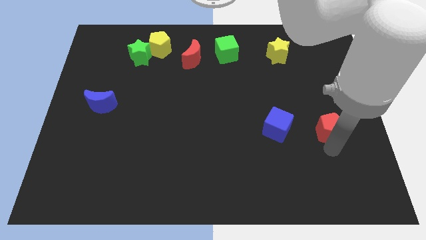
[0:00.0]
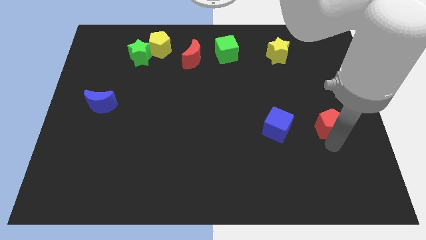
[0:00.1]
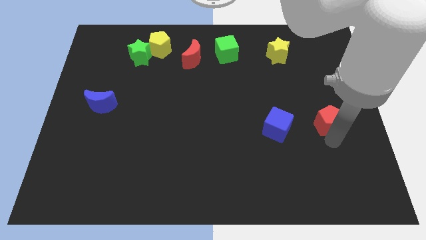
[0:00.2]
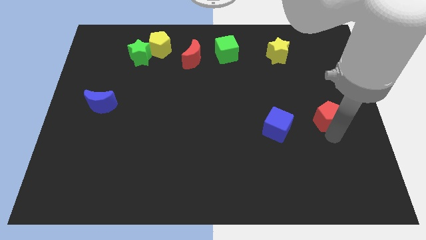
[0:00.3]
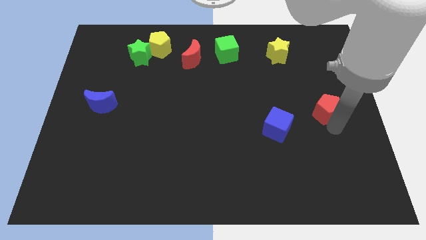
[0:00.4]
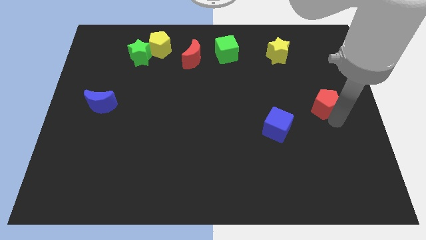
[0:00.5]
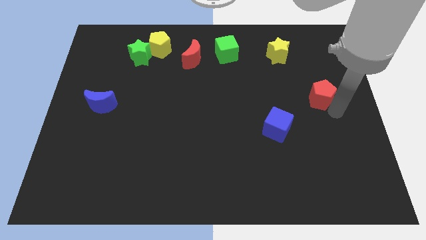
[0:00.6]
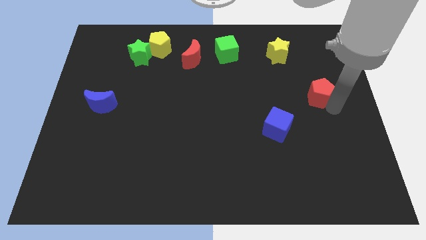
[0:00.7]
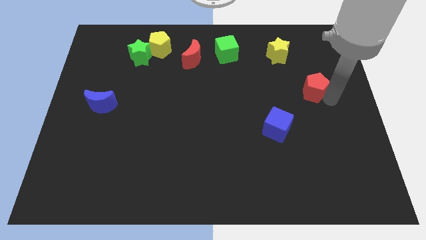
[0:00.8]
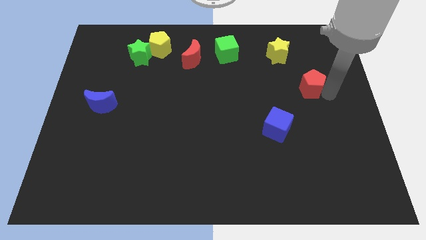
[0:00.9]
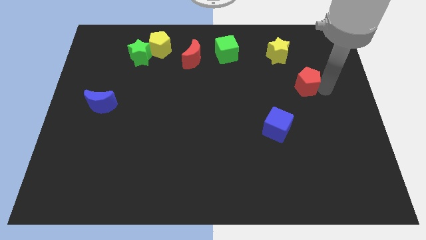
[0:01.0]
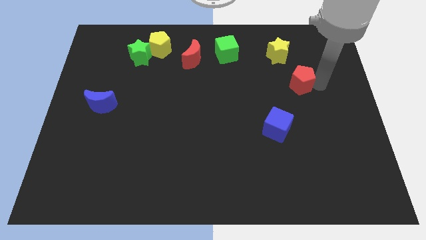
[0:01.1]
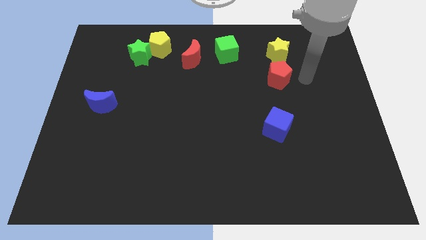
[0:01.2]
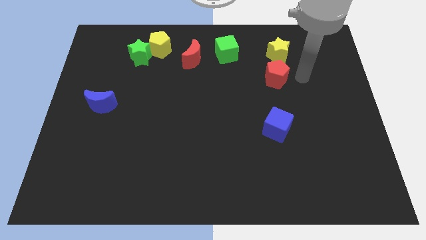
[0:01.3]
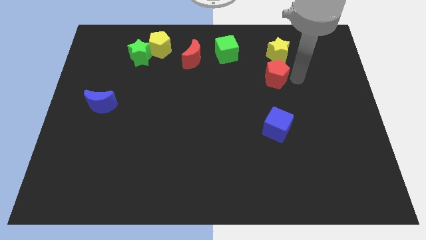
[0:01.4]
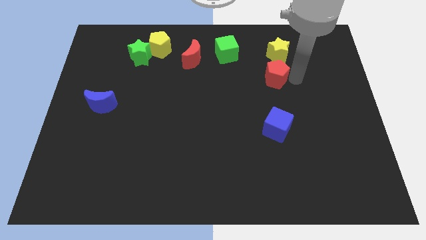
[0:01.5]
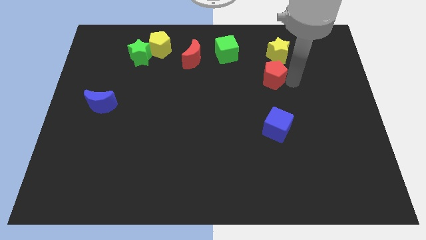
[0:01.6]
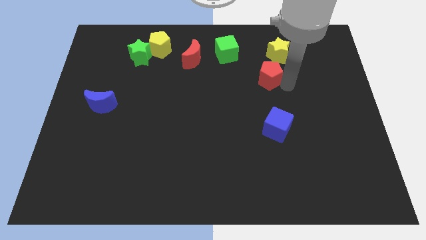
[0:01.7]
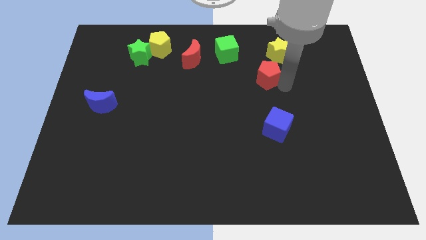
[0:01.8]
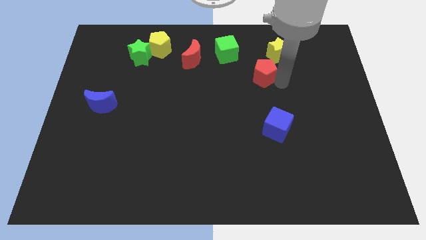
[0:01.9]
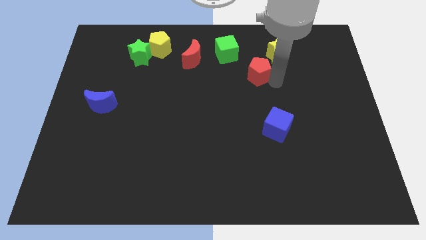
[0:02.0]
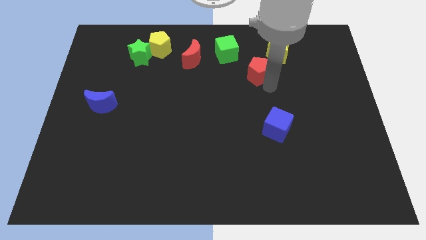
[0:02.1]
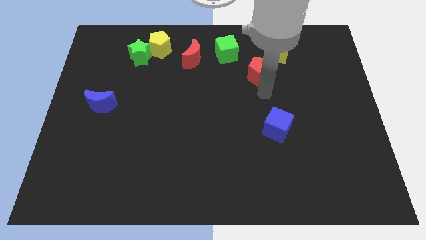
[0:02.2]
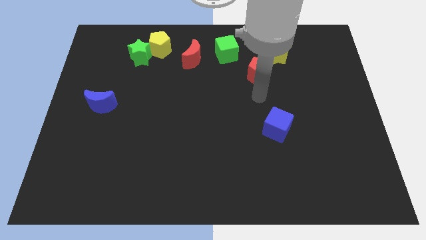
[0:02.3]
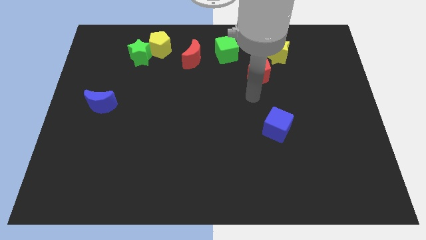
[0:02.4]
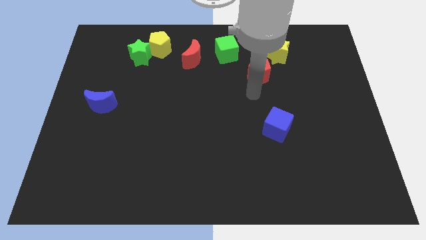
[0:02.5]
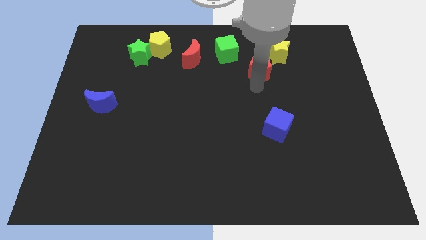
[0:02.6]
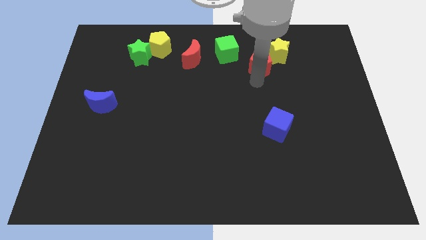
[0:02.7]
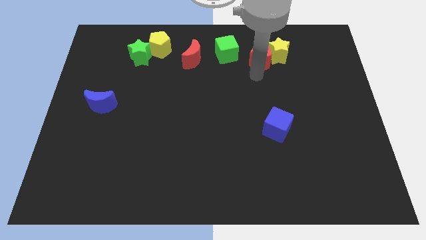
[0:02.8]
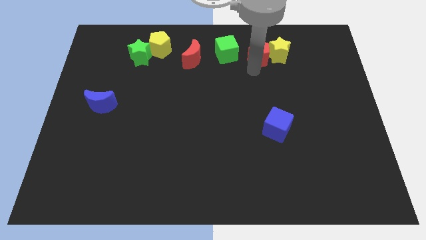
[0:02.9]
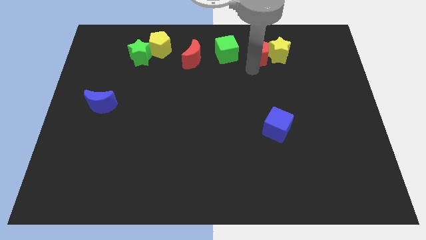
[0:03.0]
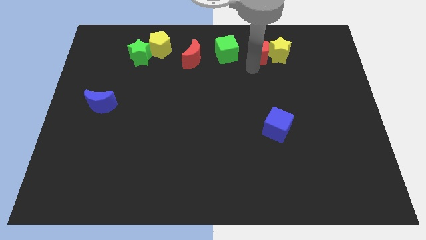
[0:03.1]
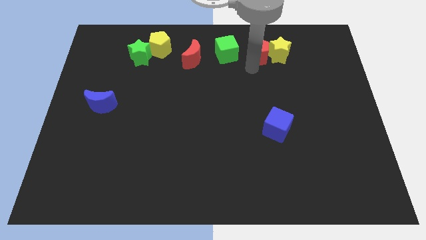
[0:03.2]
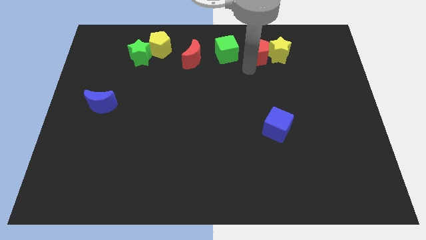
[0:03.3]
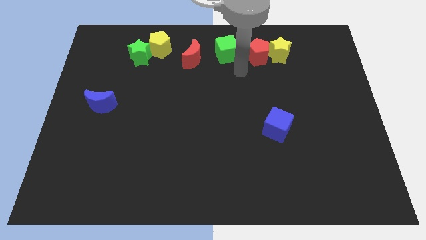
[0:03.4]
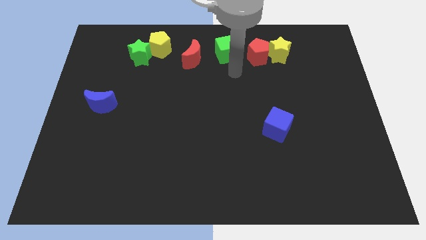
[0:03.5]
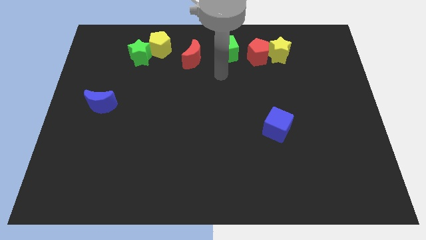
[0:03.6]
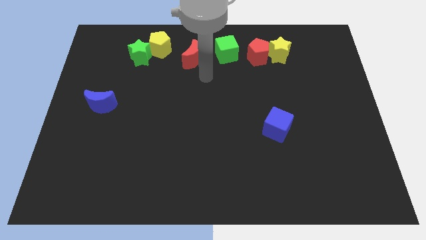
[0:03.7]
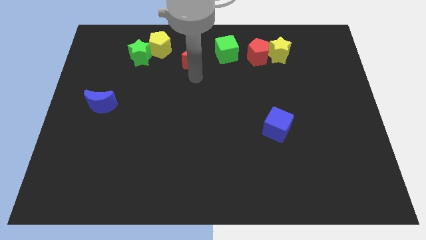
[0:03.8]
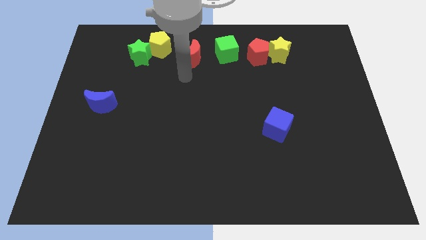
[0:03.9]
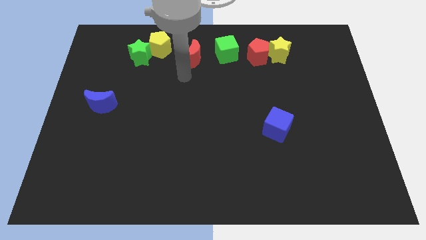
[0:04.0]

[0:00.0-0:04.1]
place the red pentagon in between green cube and yellow star

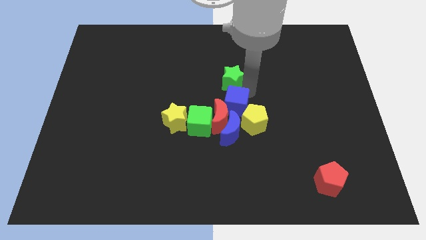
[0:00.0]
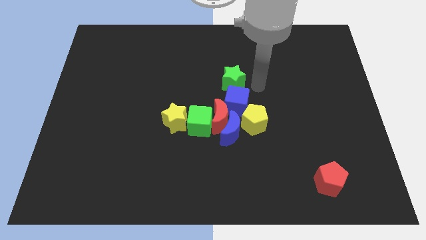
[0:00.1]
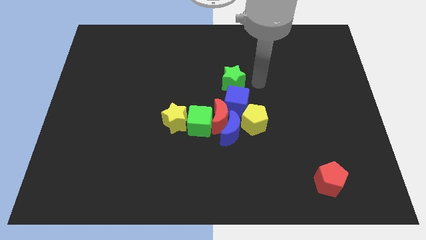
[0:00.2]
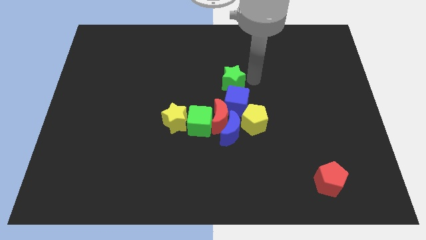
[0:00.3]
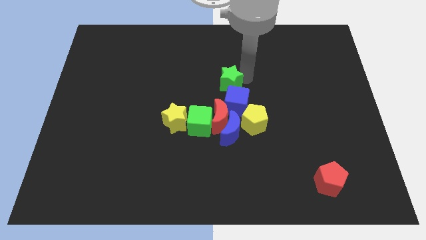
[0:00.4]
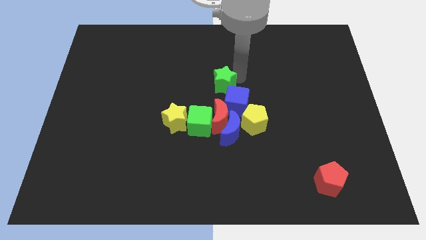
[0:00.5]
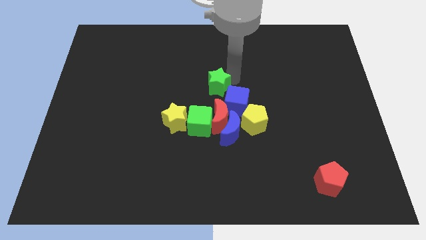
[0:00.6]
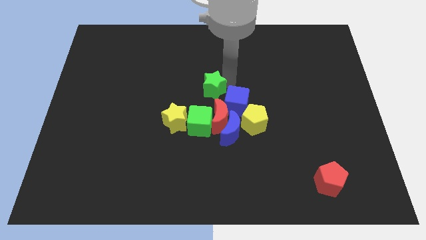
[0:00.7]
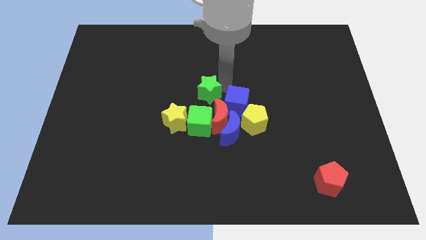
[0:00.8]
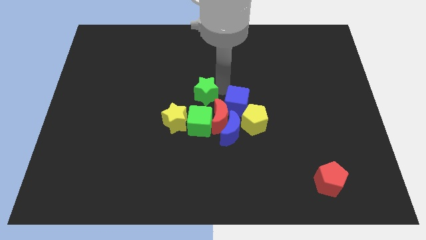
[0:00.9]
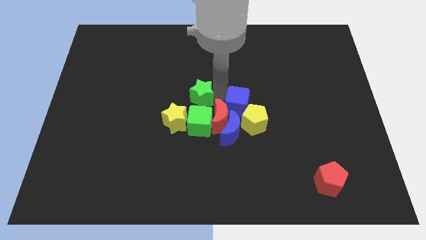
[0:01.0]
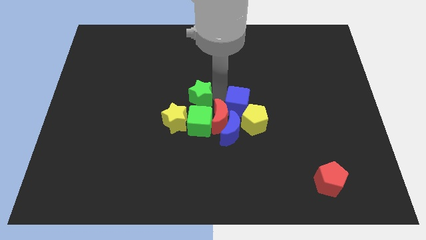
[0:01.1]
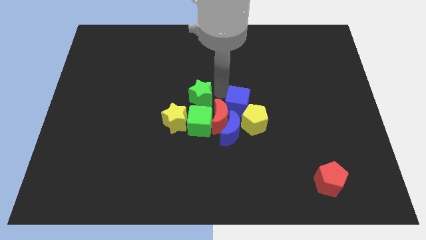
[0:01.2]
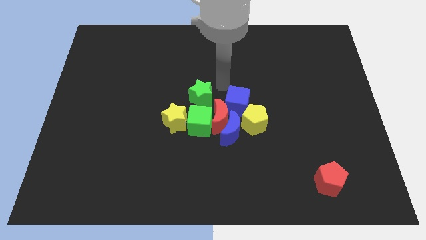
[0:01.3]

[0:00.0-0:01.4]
place the green star at the top of green cube

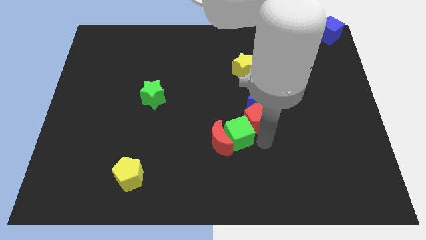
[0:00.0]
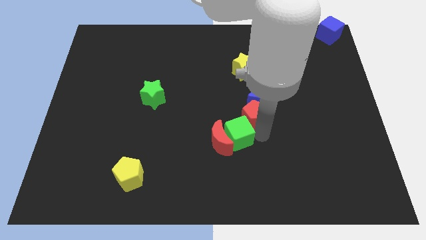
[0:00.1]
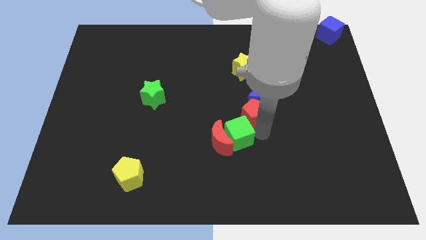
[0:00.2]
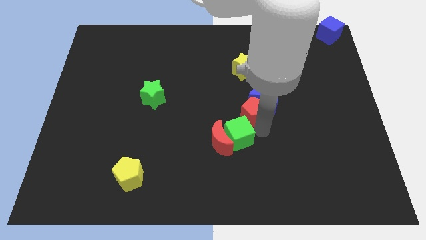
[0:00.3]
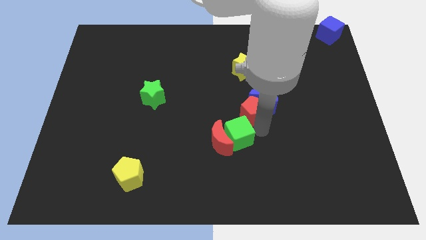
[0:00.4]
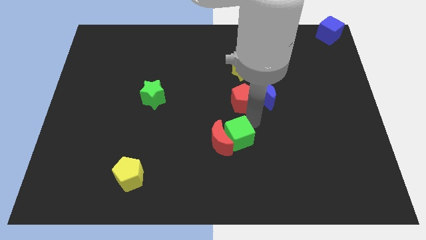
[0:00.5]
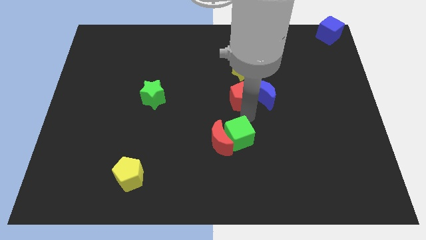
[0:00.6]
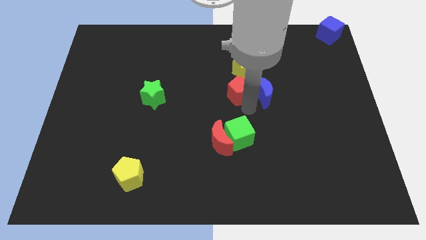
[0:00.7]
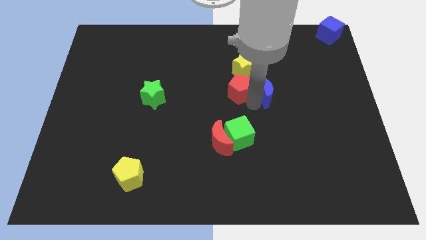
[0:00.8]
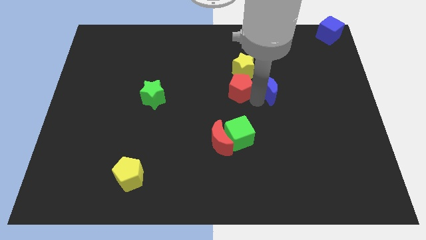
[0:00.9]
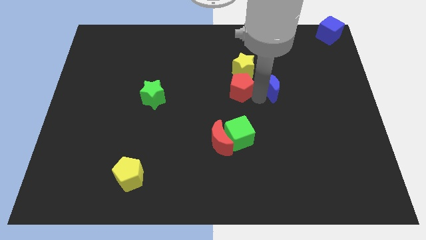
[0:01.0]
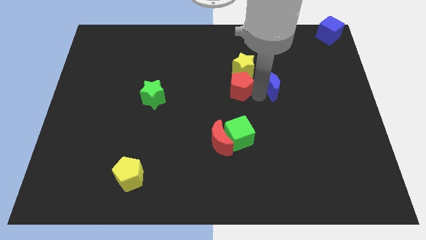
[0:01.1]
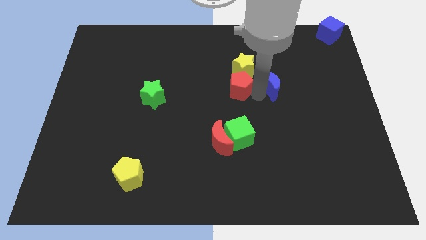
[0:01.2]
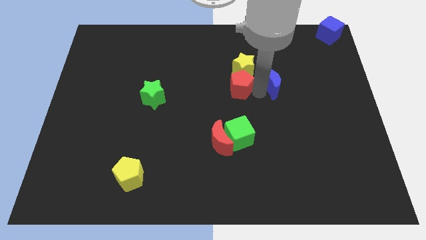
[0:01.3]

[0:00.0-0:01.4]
push the red pentagon into the yellow star

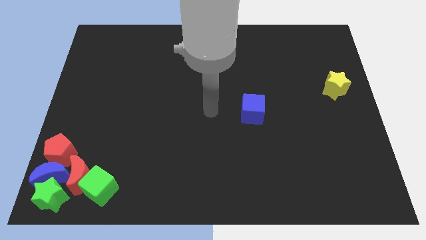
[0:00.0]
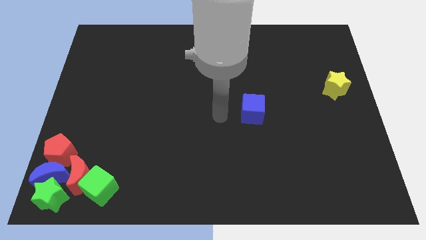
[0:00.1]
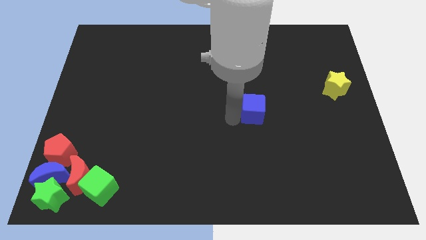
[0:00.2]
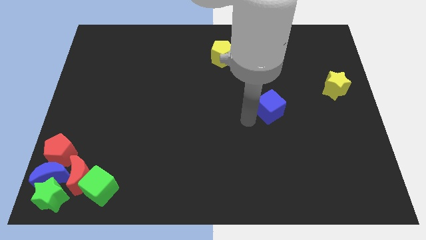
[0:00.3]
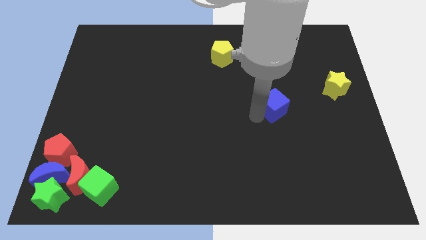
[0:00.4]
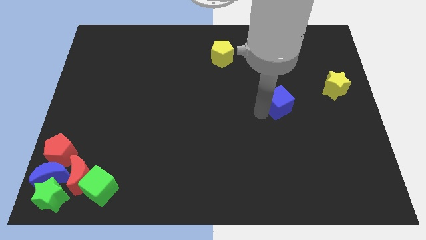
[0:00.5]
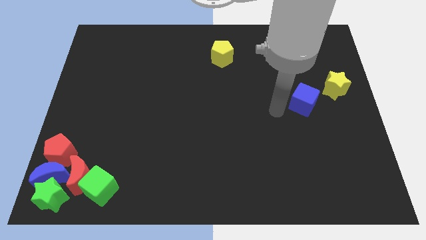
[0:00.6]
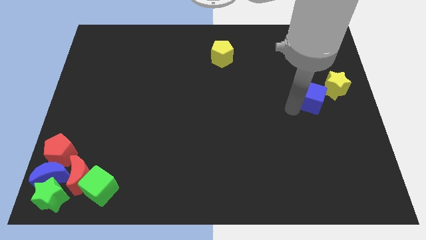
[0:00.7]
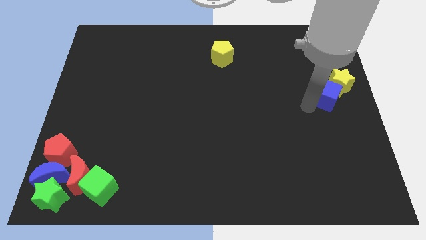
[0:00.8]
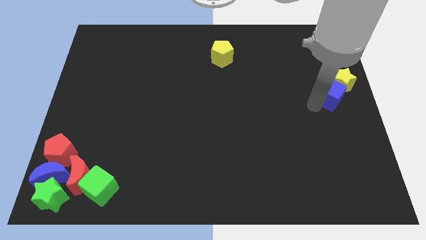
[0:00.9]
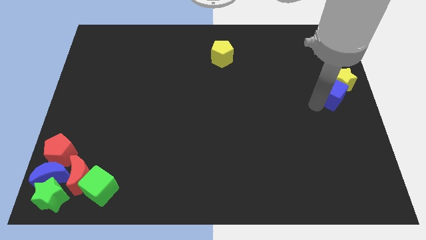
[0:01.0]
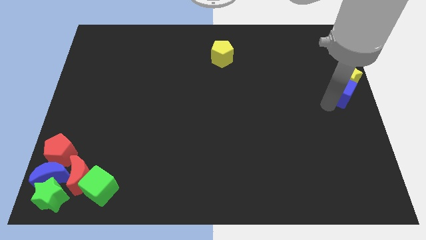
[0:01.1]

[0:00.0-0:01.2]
push the blue cube into the yellow star

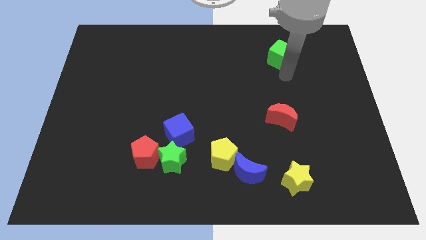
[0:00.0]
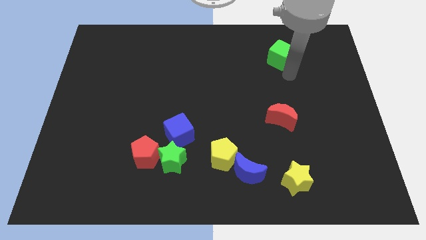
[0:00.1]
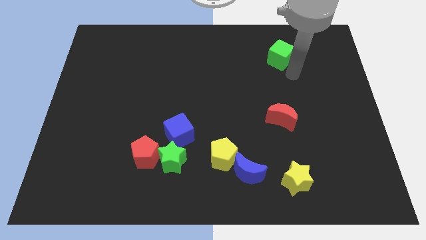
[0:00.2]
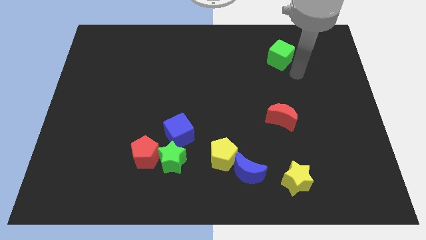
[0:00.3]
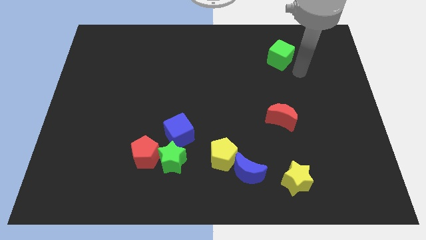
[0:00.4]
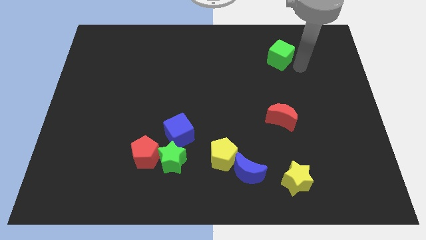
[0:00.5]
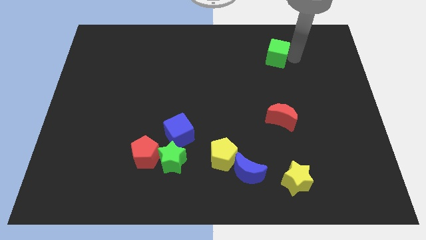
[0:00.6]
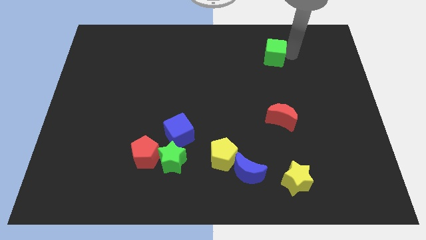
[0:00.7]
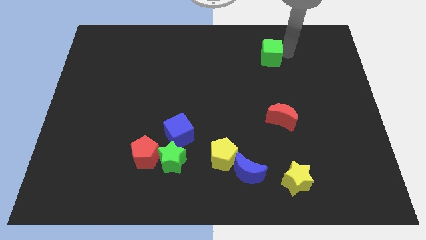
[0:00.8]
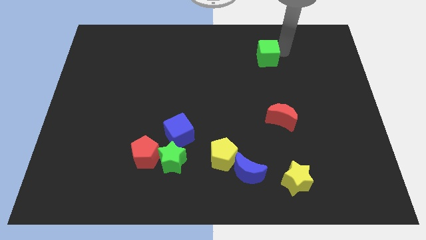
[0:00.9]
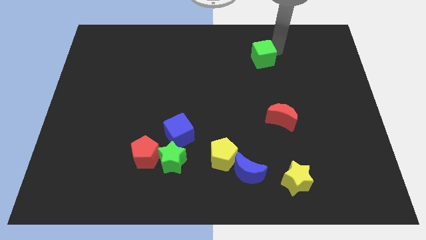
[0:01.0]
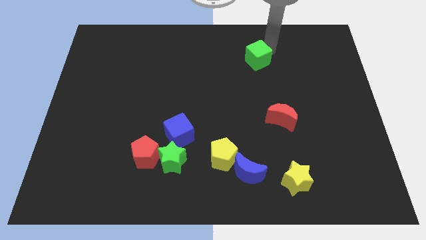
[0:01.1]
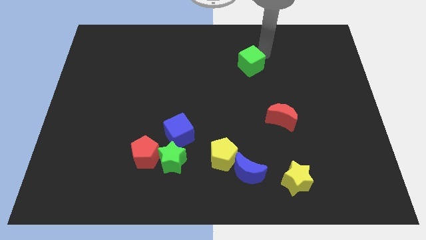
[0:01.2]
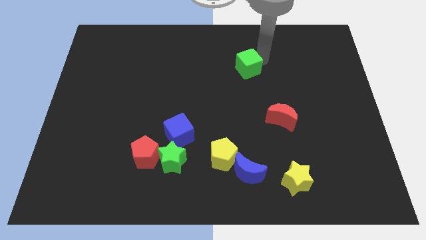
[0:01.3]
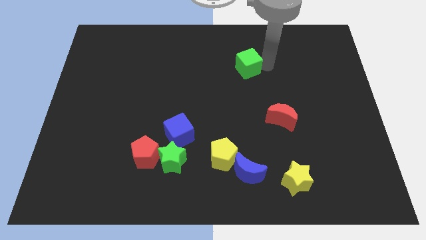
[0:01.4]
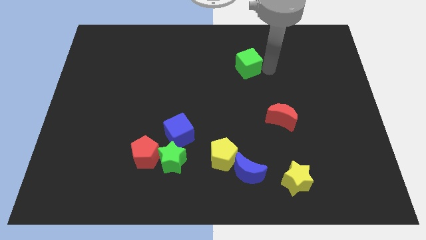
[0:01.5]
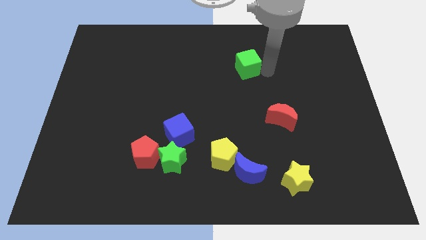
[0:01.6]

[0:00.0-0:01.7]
place the green cube diagonally to red moon
